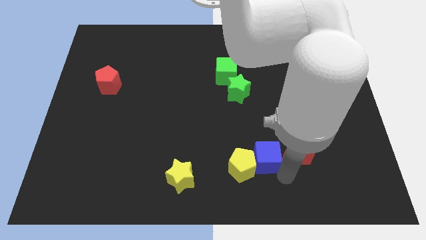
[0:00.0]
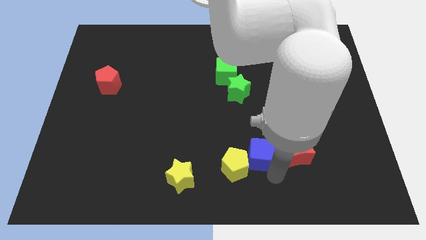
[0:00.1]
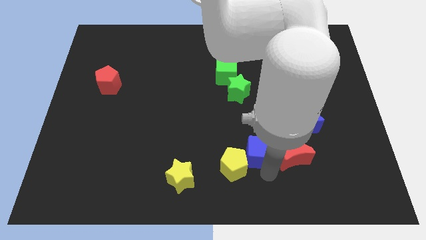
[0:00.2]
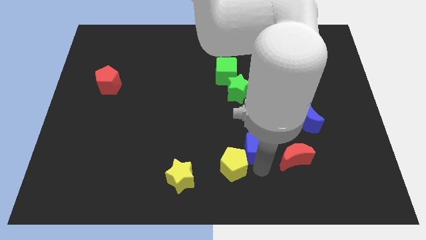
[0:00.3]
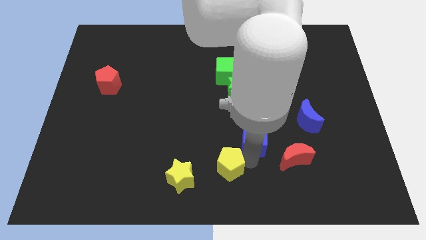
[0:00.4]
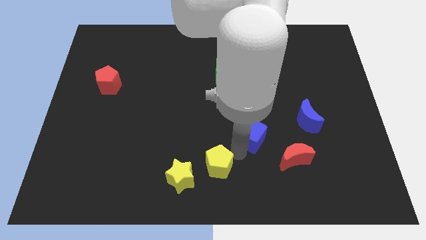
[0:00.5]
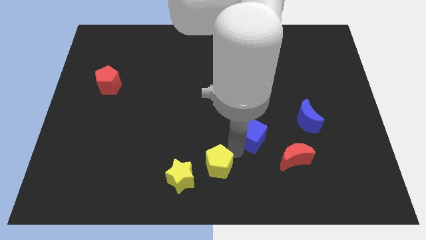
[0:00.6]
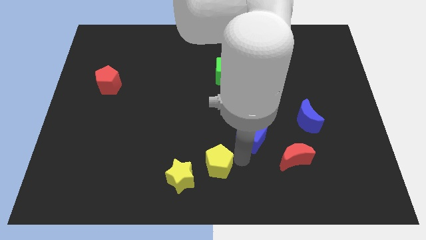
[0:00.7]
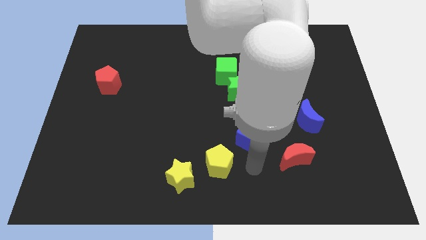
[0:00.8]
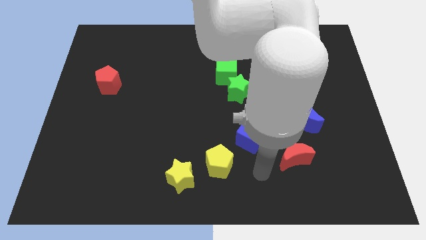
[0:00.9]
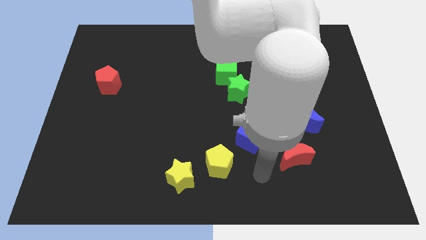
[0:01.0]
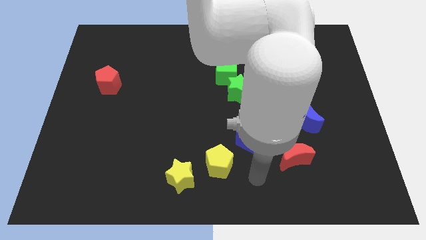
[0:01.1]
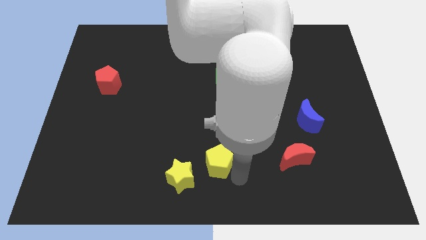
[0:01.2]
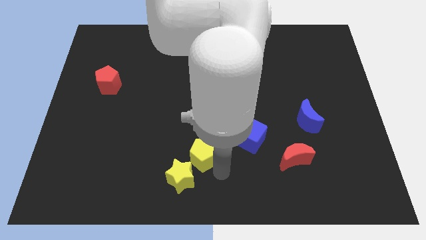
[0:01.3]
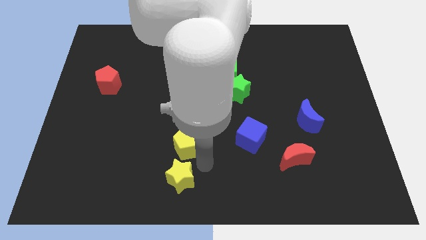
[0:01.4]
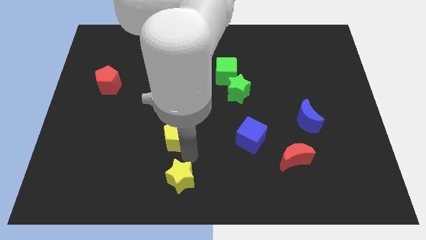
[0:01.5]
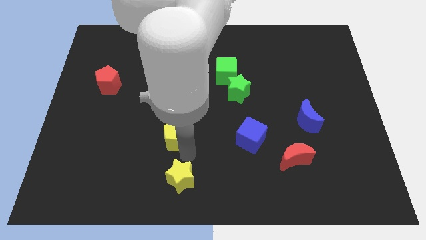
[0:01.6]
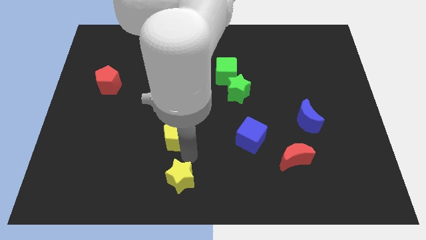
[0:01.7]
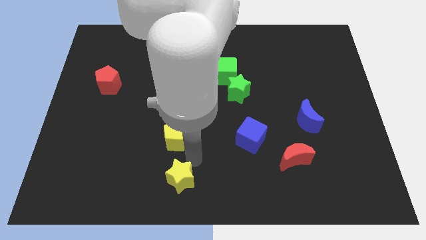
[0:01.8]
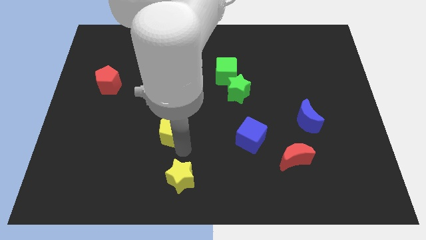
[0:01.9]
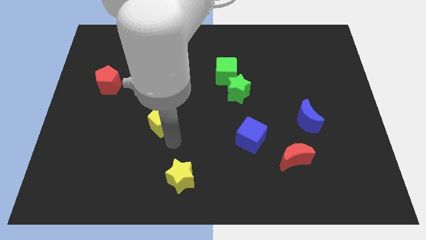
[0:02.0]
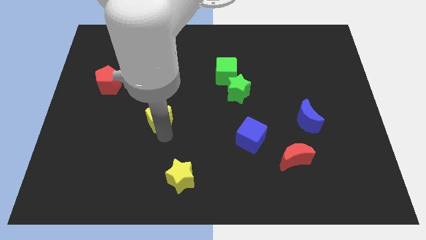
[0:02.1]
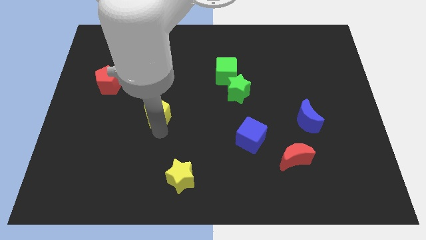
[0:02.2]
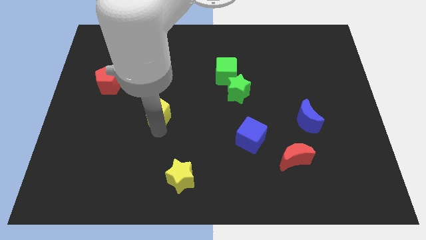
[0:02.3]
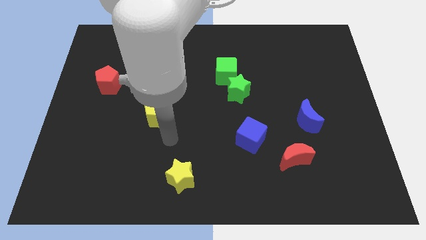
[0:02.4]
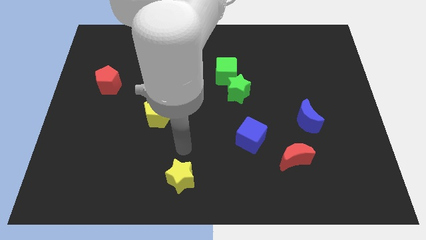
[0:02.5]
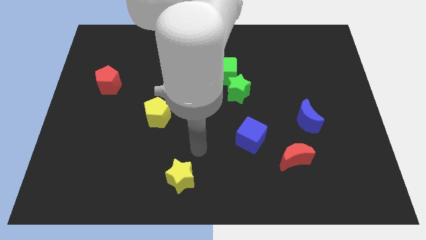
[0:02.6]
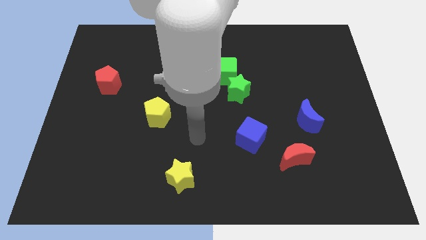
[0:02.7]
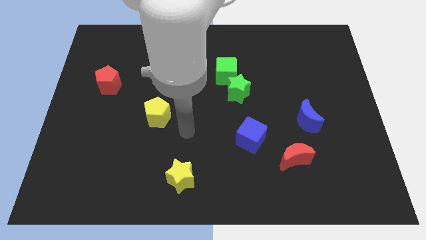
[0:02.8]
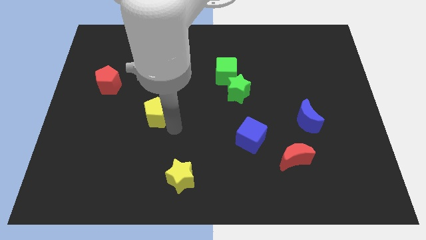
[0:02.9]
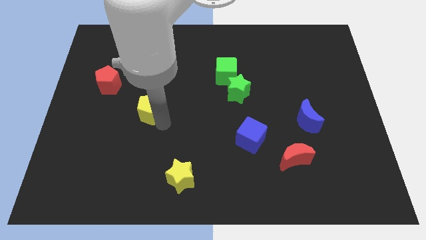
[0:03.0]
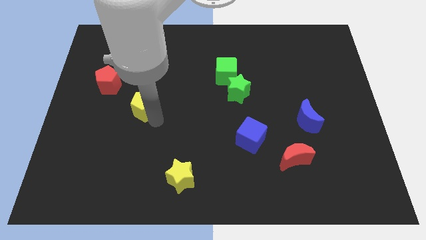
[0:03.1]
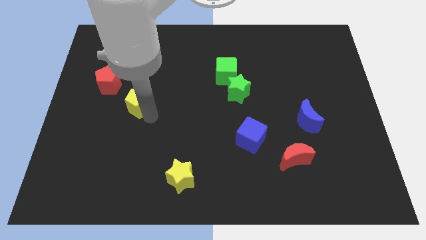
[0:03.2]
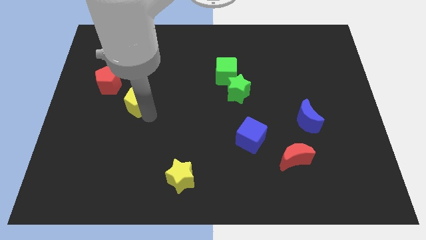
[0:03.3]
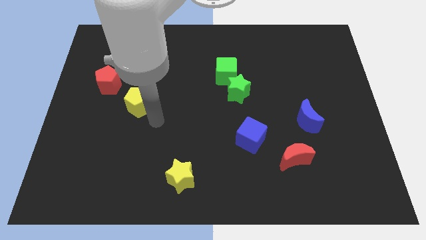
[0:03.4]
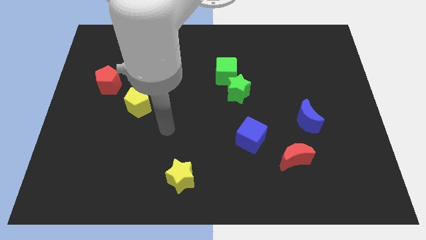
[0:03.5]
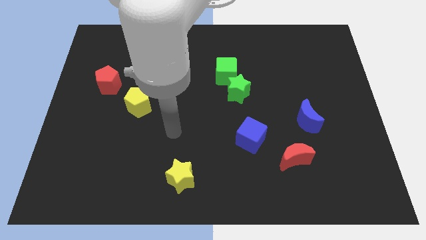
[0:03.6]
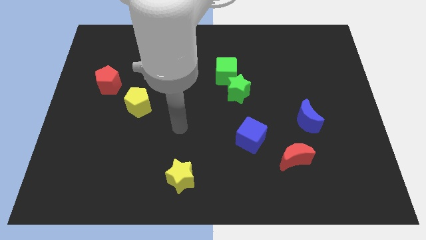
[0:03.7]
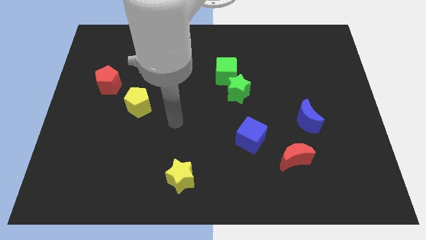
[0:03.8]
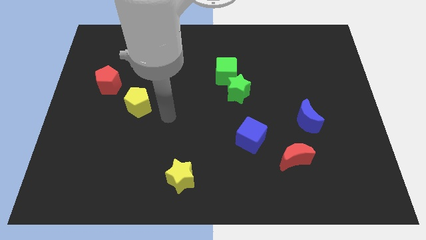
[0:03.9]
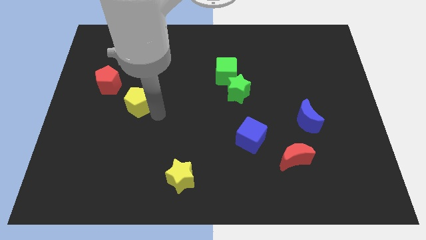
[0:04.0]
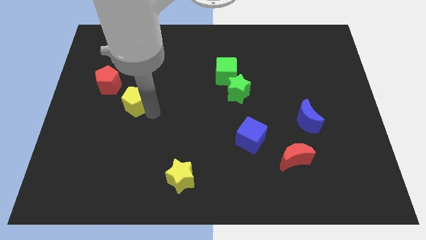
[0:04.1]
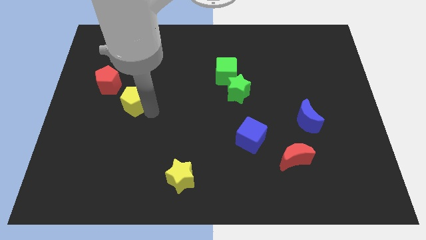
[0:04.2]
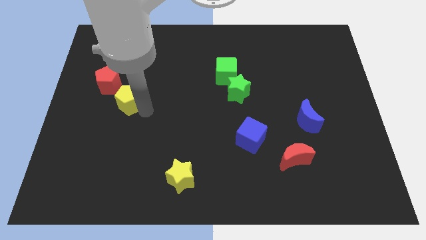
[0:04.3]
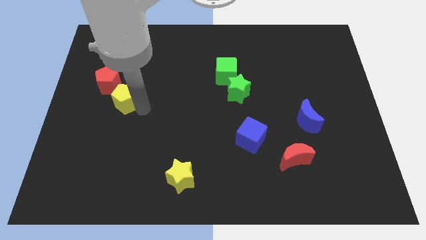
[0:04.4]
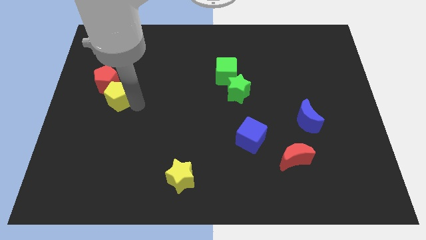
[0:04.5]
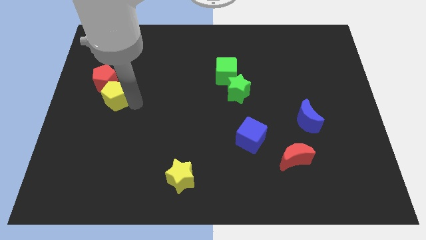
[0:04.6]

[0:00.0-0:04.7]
slide the yellow pentagon into the red pentagon

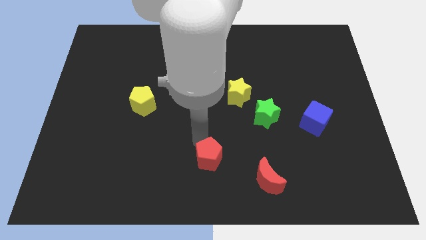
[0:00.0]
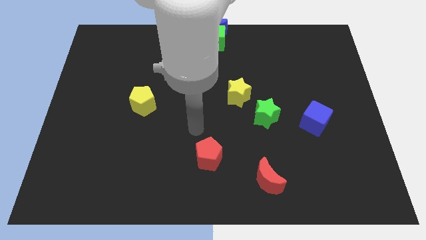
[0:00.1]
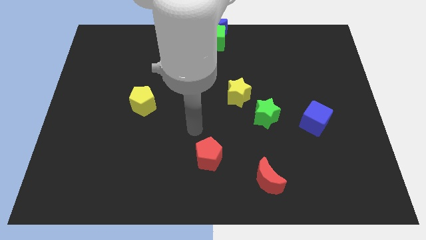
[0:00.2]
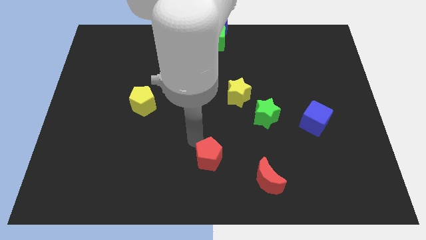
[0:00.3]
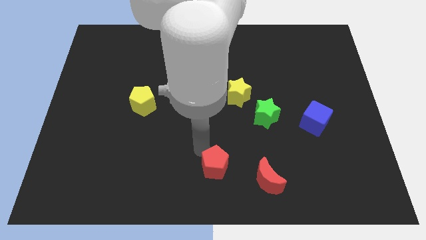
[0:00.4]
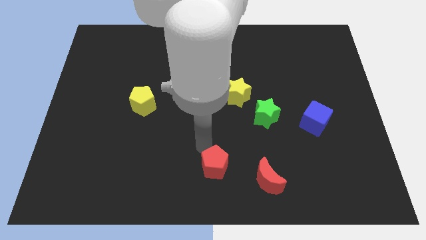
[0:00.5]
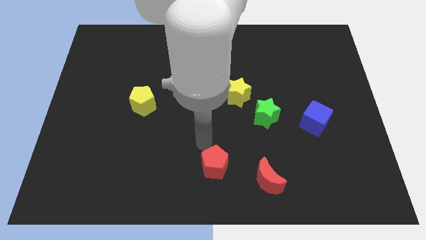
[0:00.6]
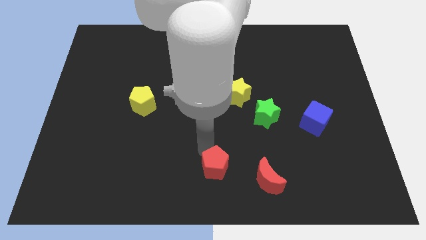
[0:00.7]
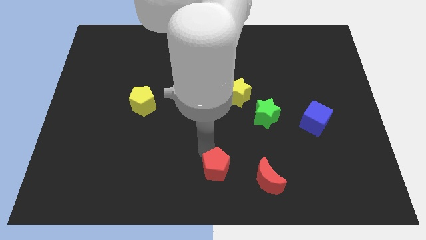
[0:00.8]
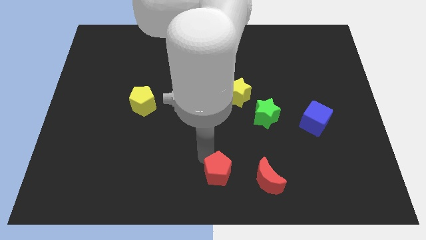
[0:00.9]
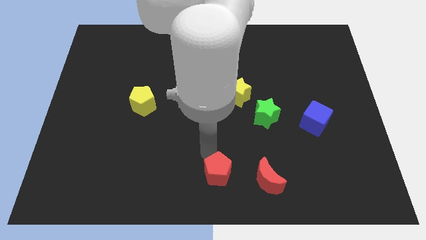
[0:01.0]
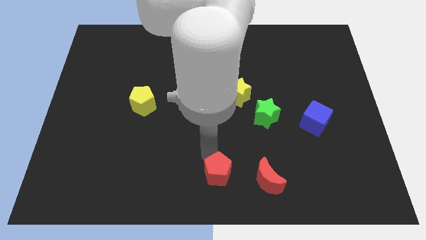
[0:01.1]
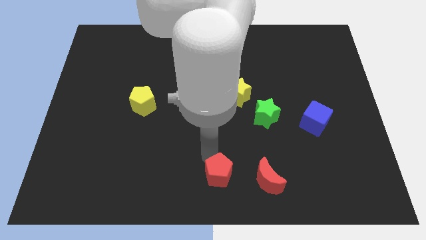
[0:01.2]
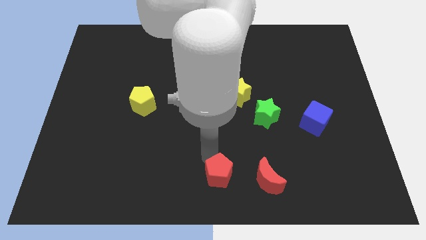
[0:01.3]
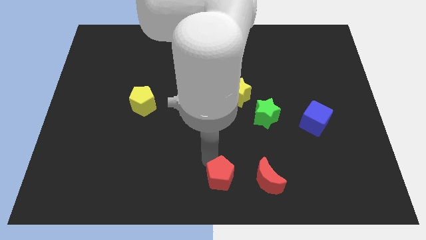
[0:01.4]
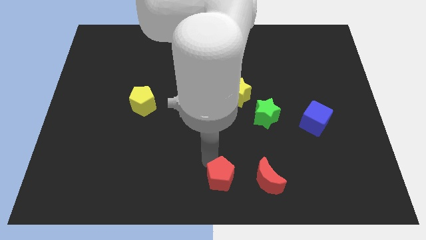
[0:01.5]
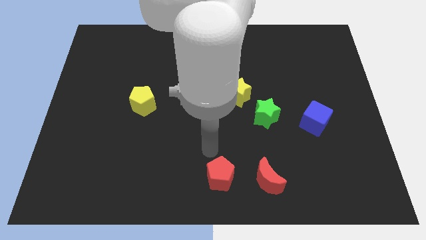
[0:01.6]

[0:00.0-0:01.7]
place the red pentagon to the left of the red moon

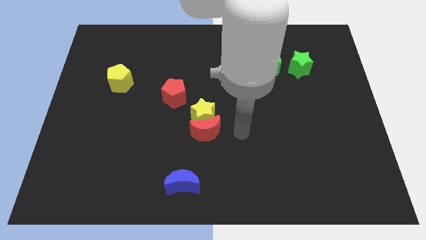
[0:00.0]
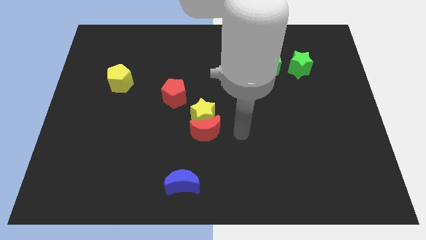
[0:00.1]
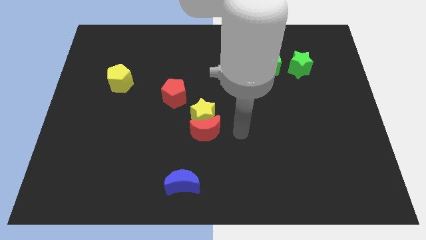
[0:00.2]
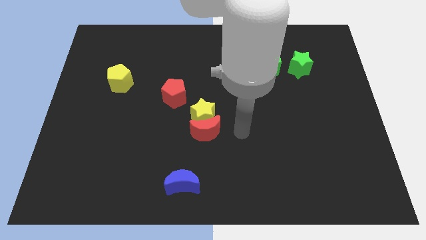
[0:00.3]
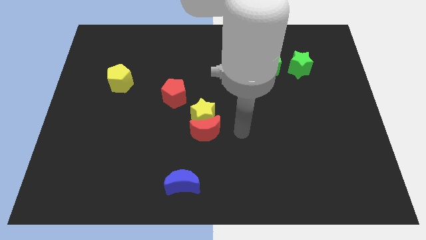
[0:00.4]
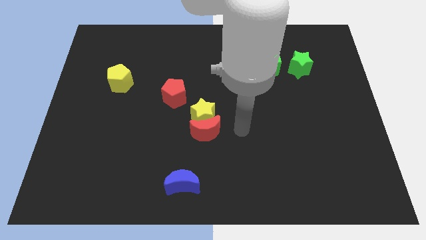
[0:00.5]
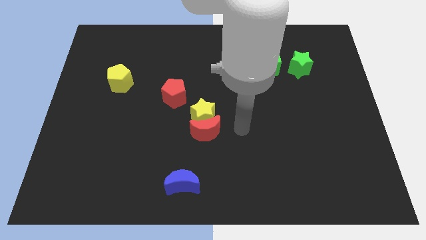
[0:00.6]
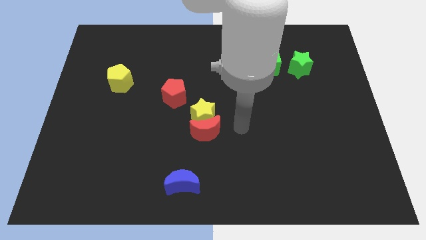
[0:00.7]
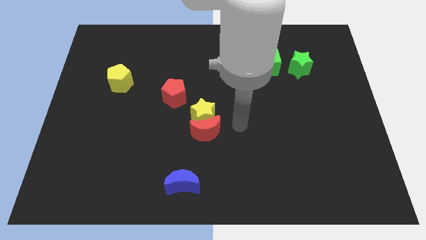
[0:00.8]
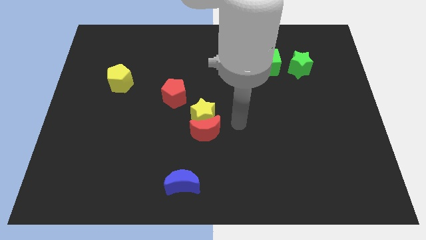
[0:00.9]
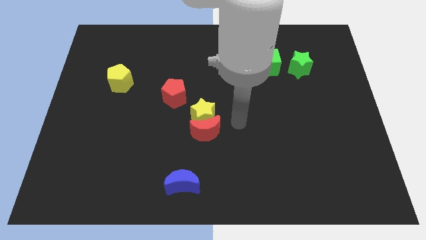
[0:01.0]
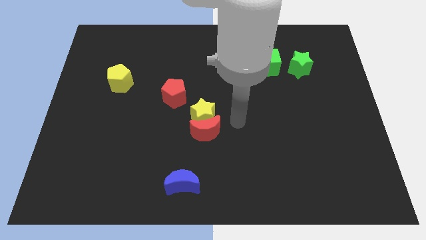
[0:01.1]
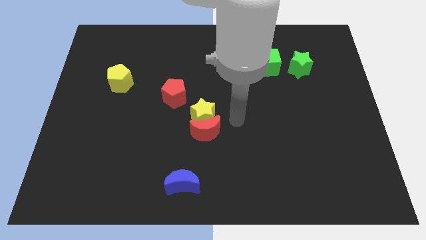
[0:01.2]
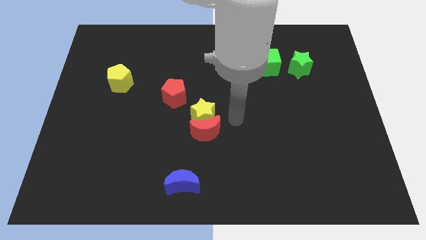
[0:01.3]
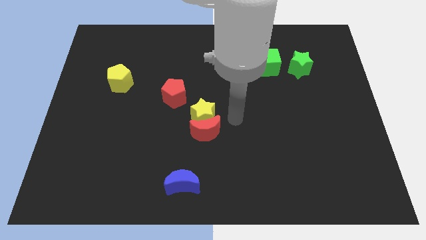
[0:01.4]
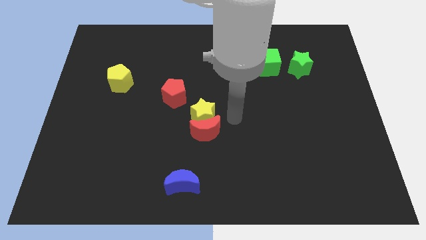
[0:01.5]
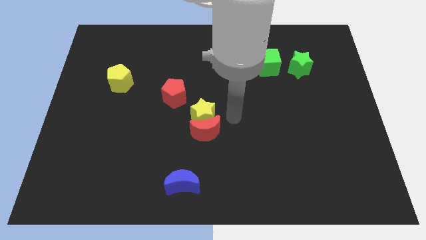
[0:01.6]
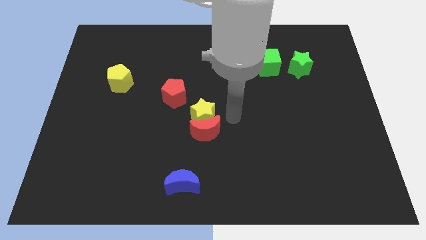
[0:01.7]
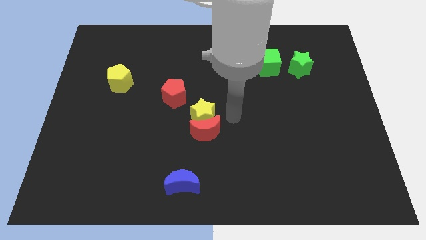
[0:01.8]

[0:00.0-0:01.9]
point your hand at the right side of the yellow star

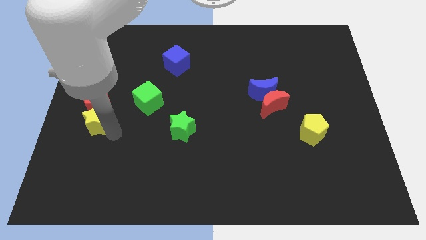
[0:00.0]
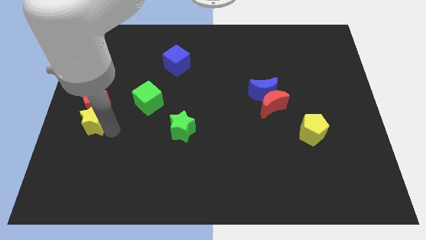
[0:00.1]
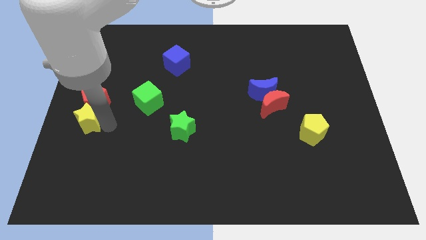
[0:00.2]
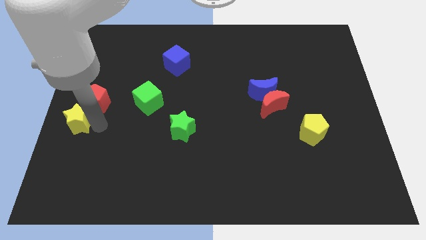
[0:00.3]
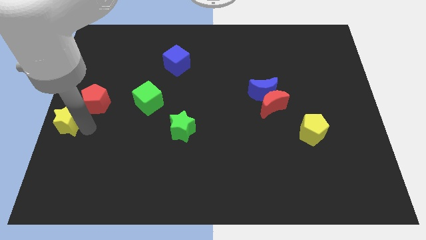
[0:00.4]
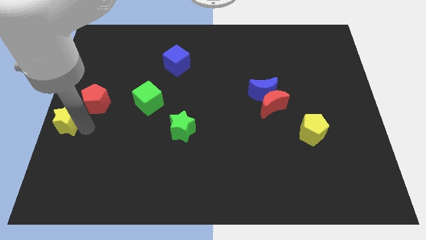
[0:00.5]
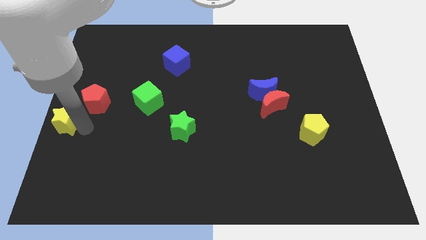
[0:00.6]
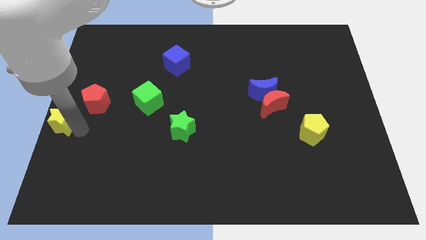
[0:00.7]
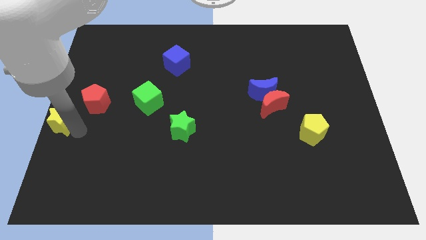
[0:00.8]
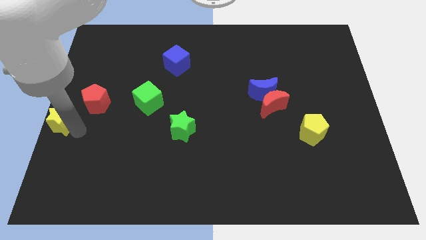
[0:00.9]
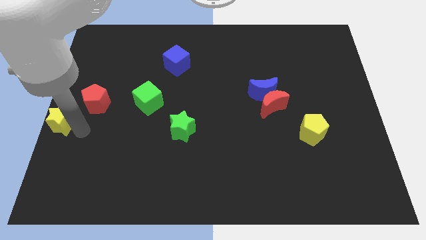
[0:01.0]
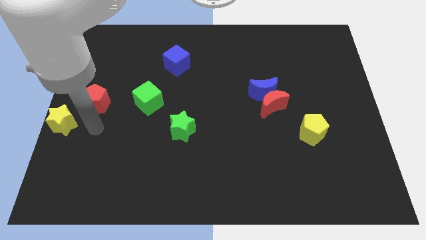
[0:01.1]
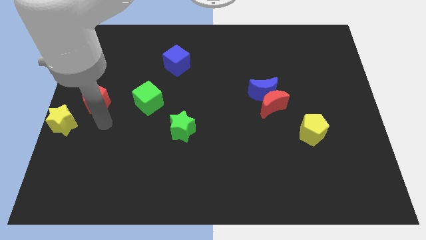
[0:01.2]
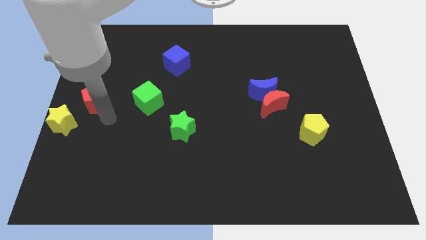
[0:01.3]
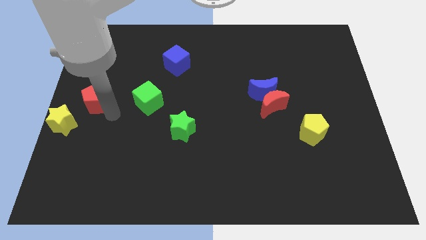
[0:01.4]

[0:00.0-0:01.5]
separate the yellow star from the red pentagon
